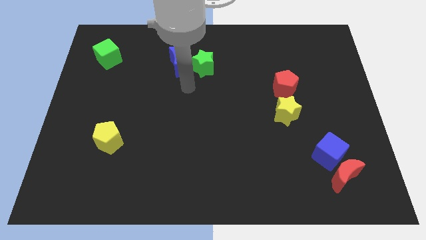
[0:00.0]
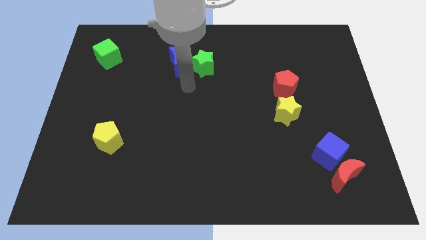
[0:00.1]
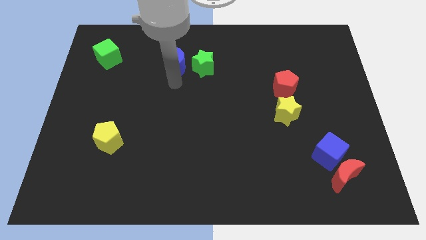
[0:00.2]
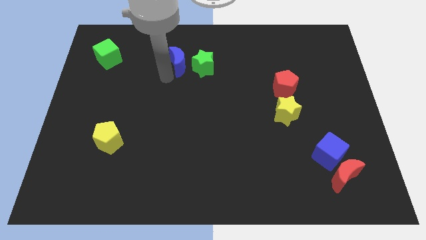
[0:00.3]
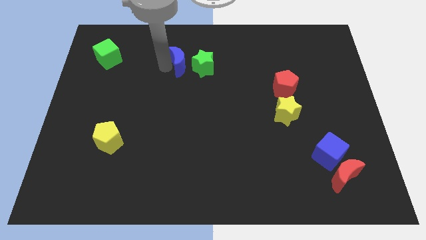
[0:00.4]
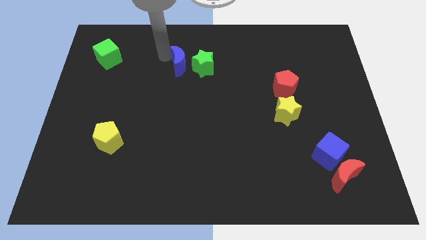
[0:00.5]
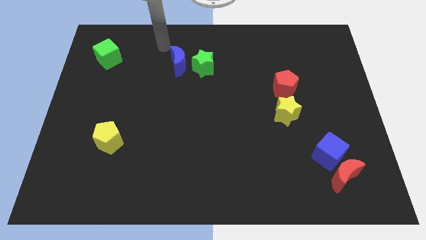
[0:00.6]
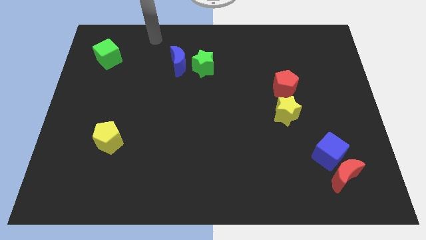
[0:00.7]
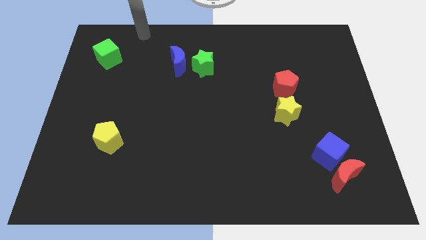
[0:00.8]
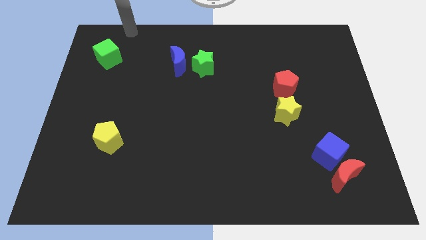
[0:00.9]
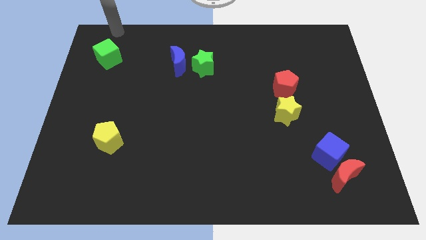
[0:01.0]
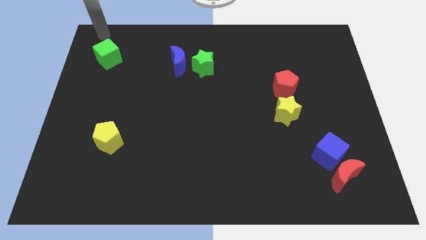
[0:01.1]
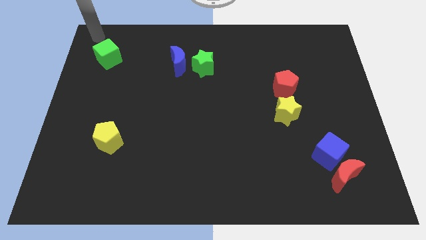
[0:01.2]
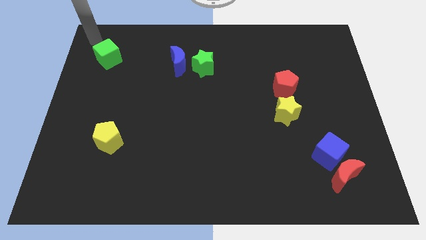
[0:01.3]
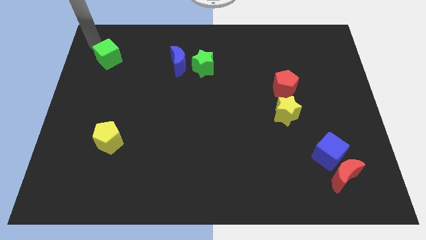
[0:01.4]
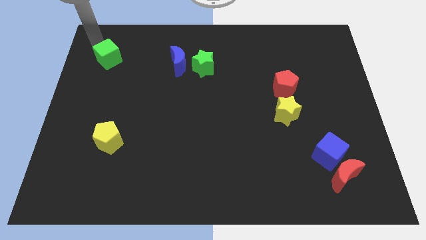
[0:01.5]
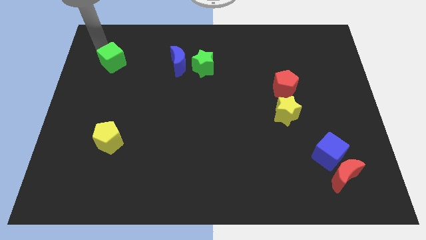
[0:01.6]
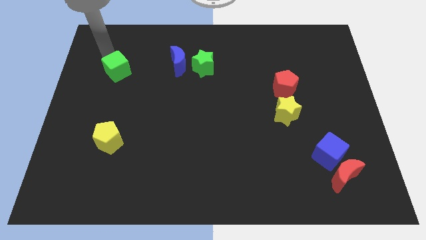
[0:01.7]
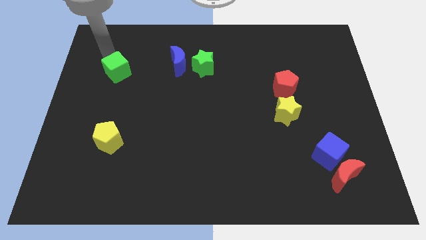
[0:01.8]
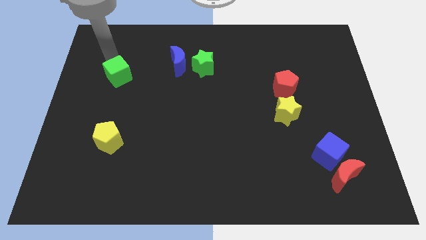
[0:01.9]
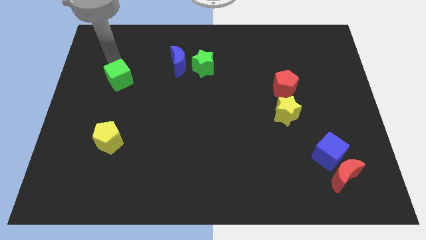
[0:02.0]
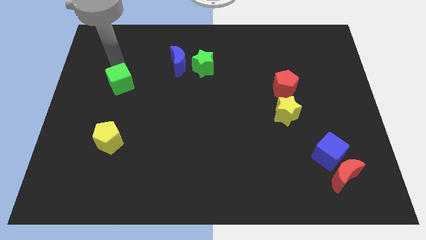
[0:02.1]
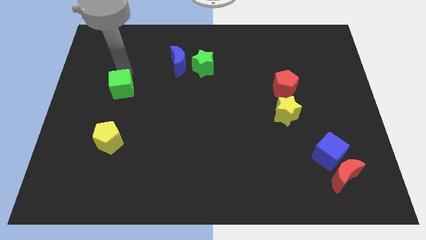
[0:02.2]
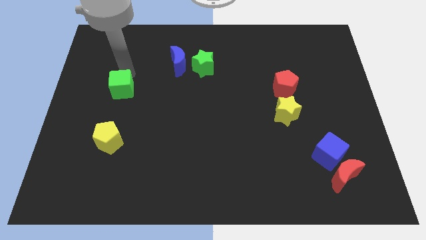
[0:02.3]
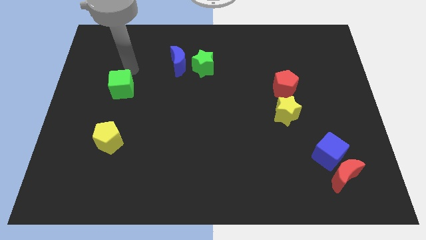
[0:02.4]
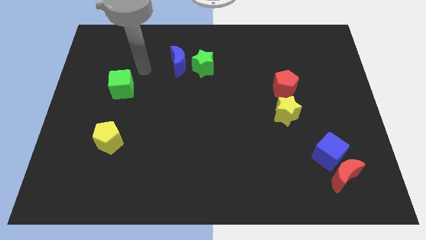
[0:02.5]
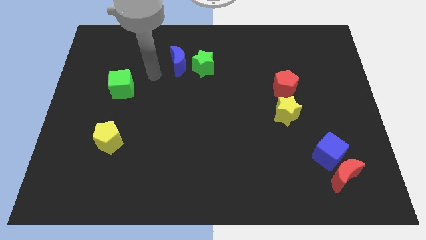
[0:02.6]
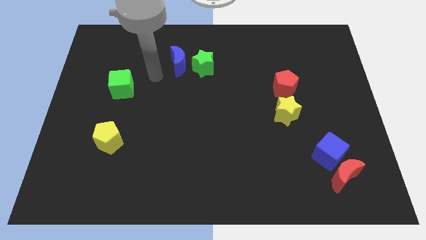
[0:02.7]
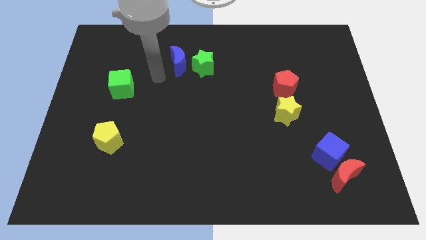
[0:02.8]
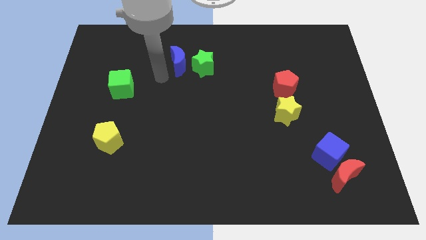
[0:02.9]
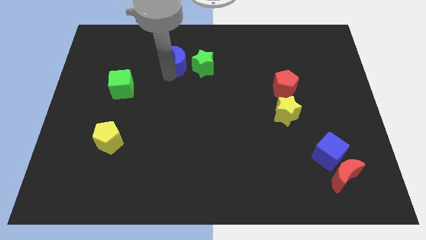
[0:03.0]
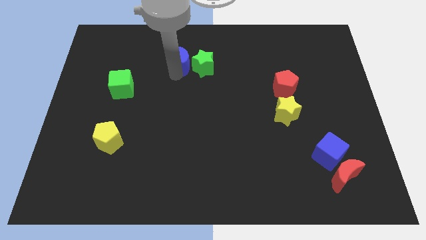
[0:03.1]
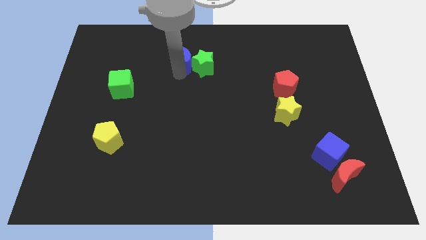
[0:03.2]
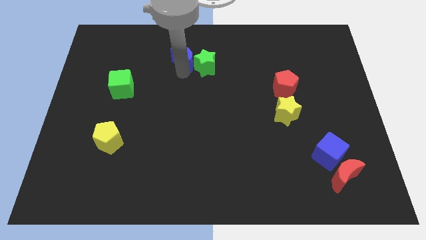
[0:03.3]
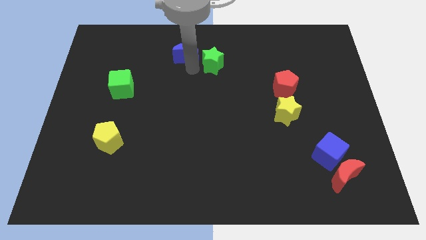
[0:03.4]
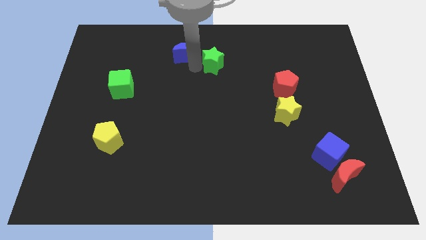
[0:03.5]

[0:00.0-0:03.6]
move blue moon into green star

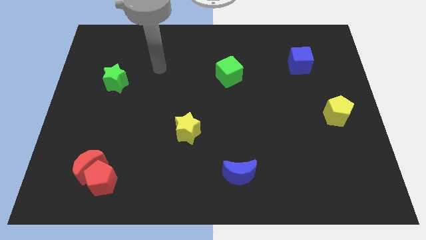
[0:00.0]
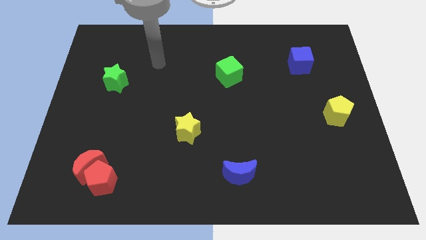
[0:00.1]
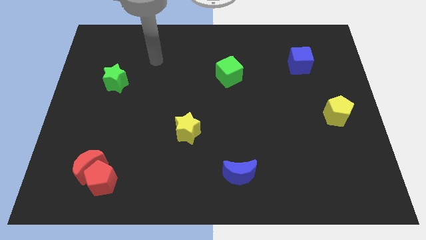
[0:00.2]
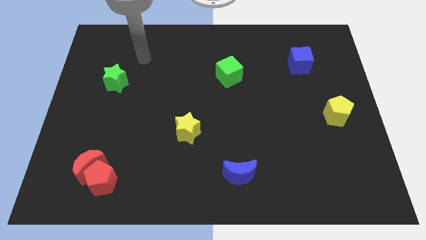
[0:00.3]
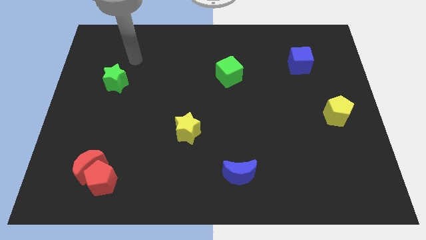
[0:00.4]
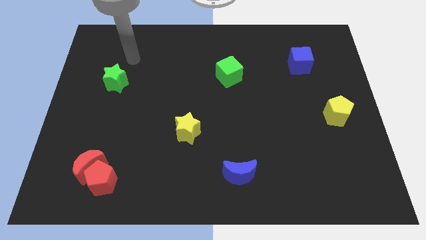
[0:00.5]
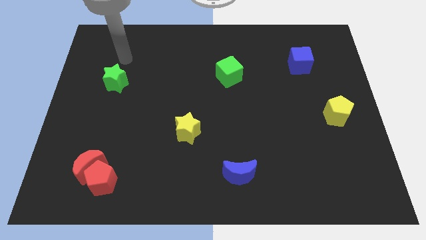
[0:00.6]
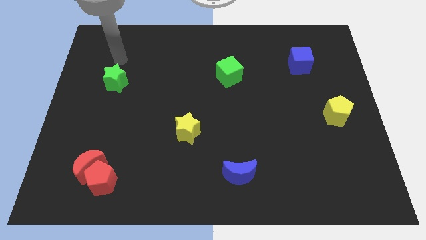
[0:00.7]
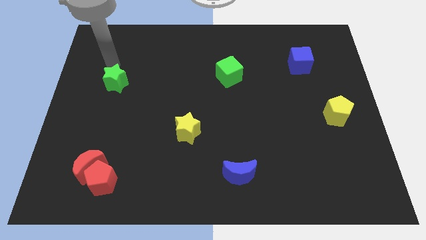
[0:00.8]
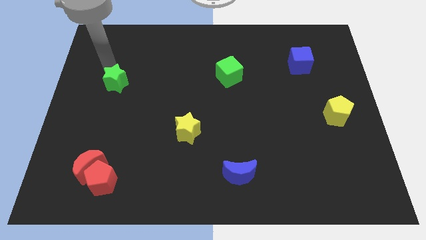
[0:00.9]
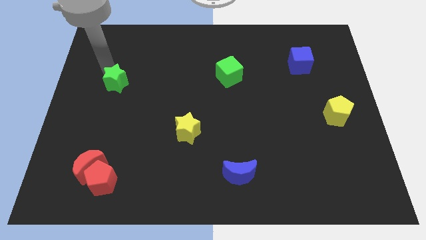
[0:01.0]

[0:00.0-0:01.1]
move your arm towards the green star

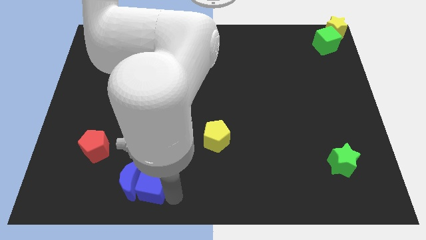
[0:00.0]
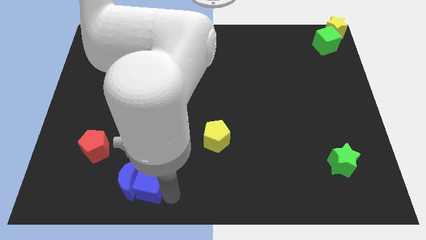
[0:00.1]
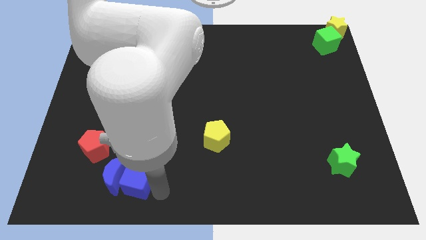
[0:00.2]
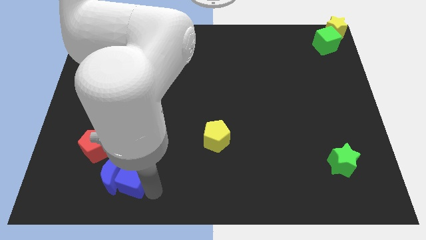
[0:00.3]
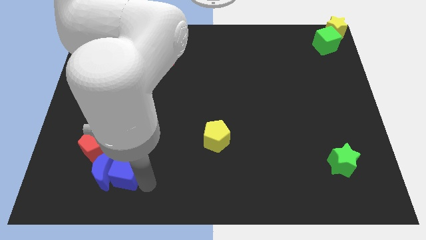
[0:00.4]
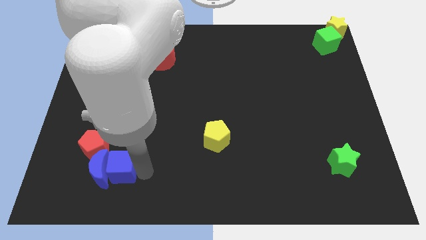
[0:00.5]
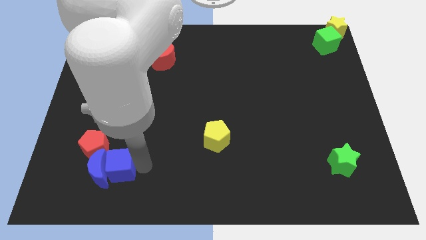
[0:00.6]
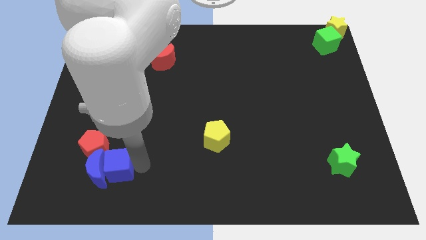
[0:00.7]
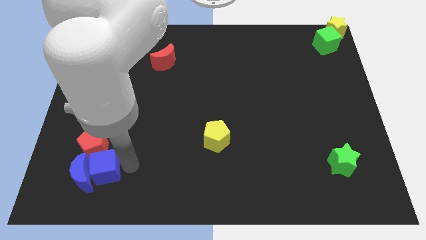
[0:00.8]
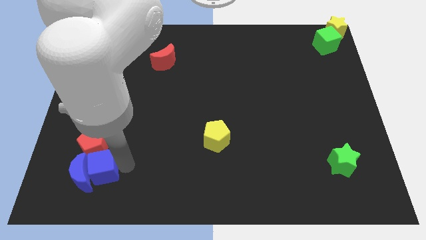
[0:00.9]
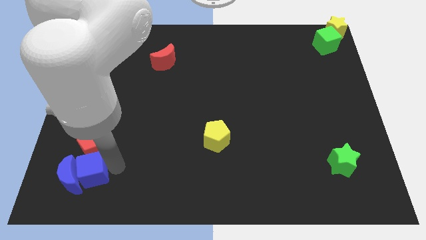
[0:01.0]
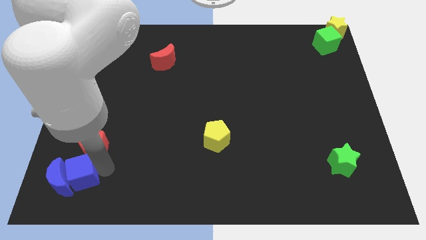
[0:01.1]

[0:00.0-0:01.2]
move the blue blocks to the bottom of the red pentagon
